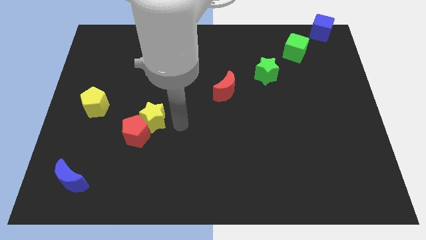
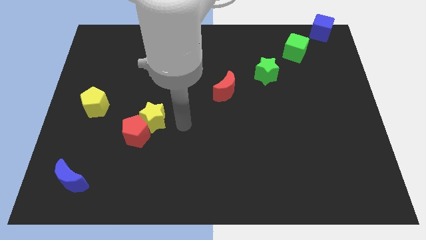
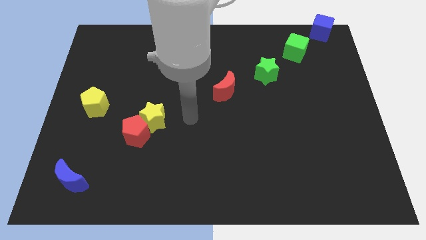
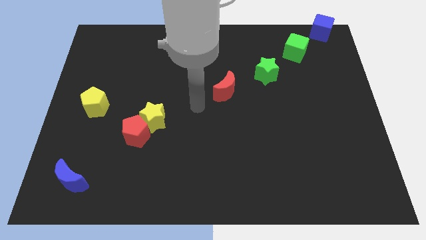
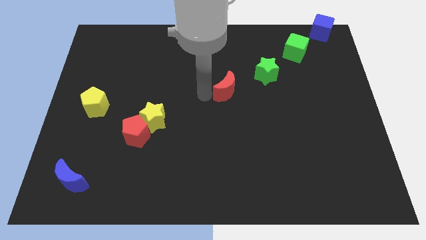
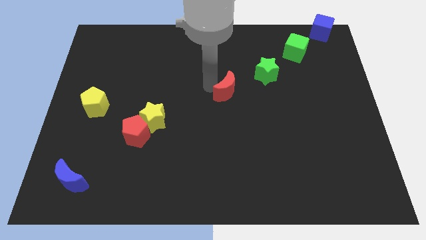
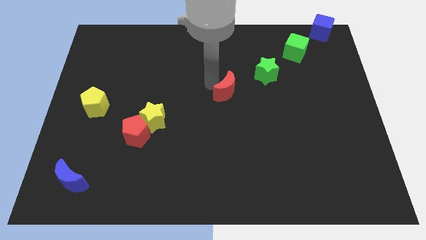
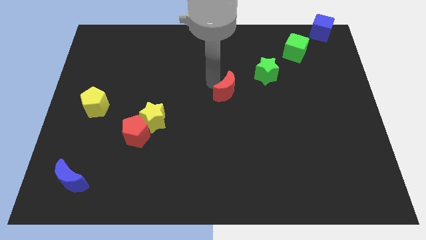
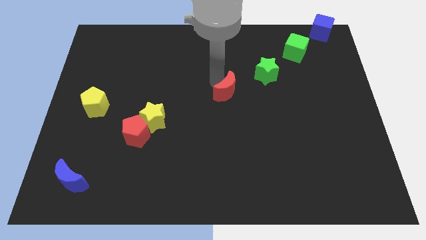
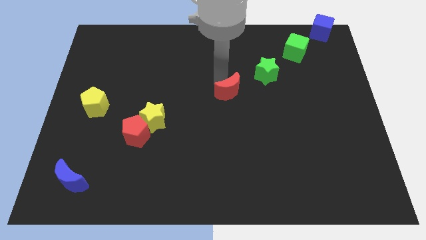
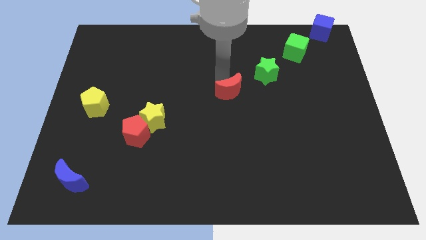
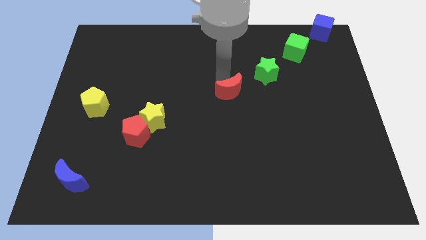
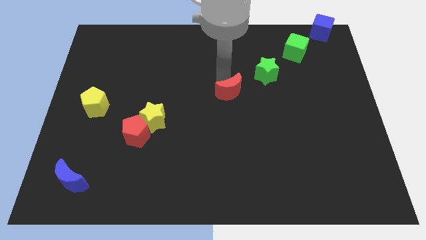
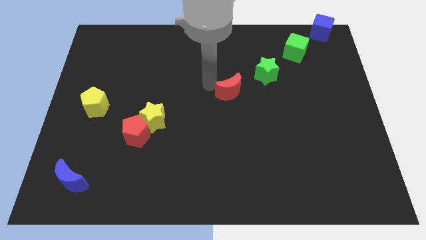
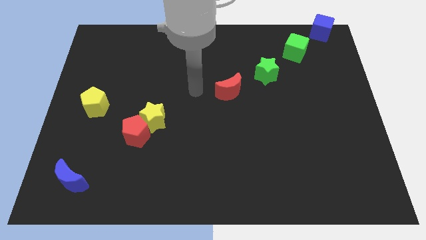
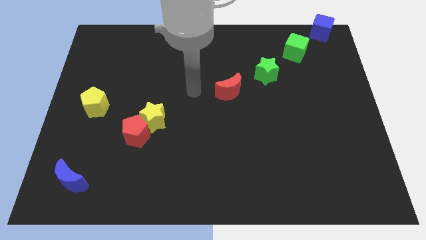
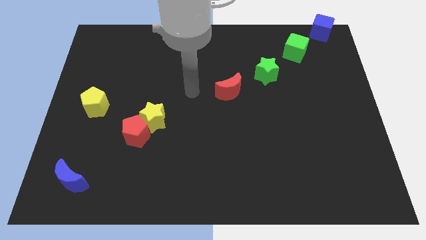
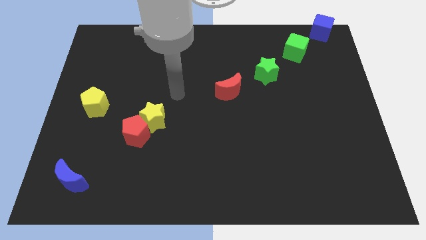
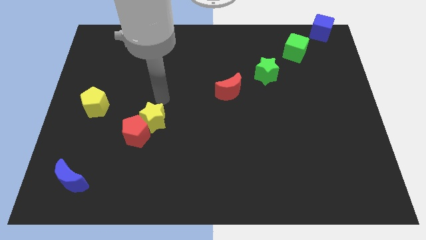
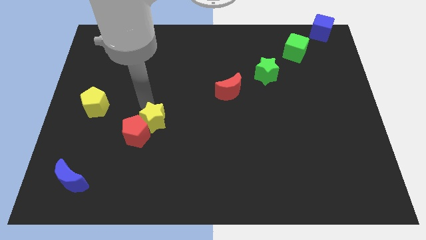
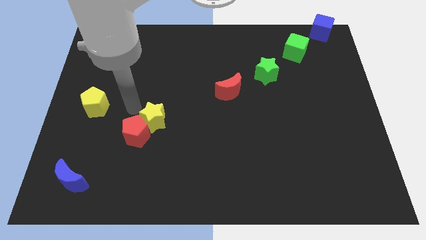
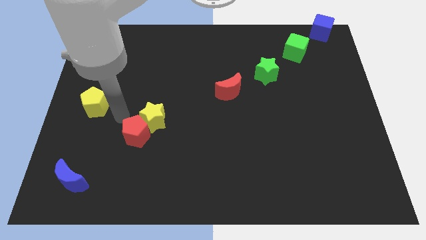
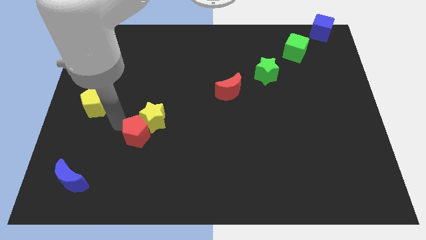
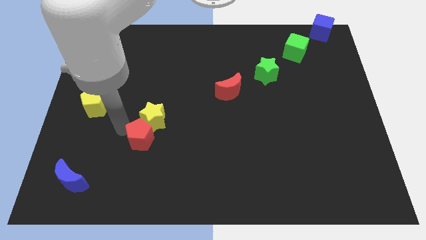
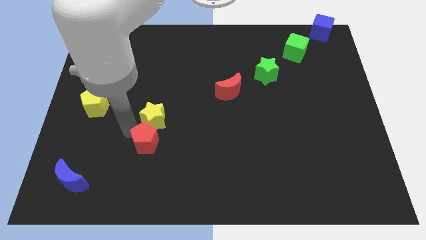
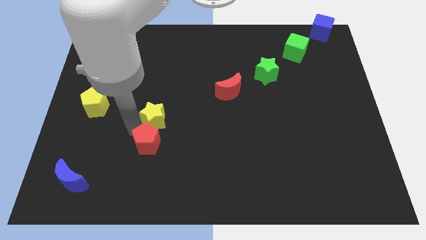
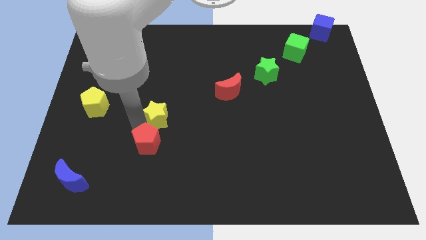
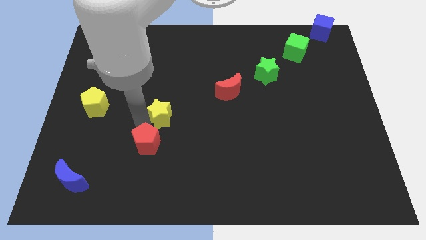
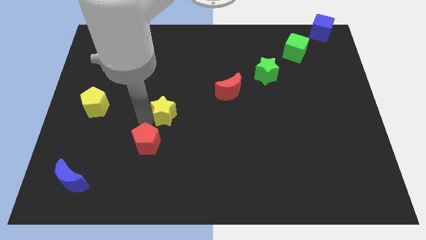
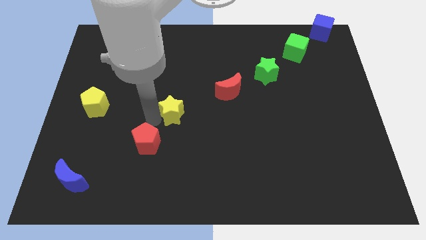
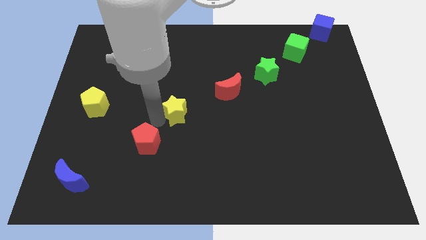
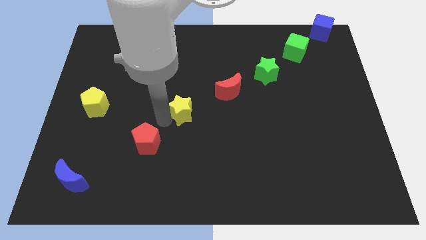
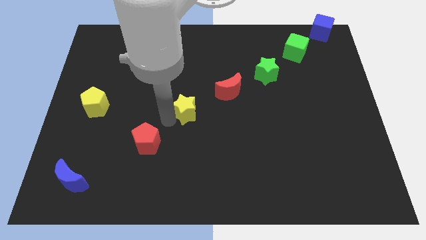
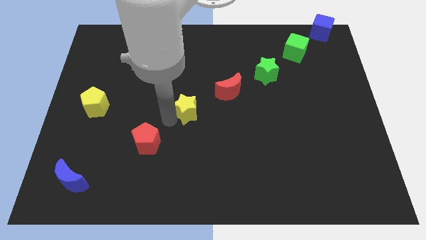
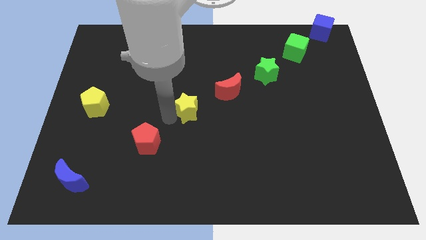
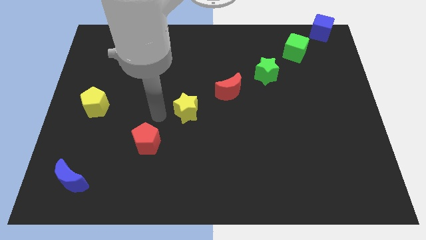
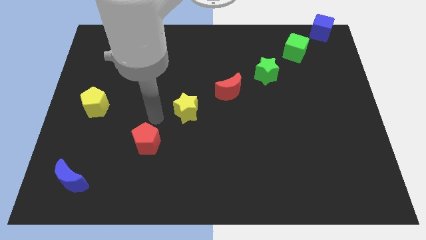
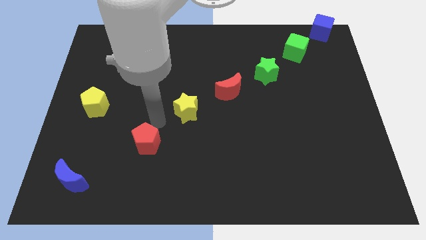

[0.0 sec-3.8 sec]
adjust the red blocks and yellow star diagonally to form a line

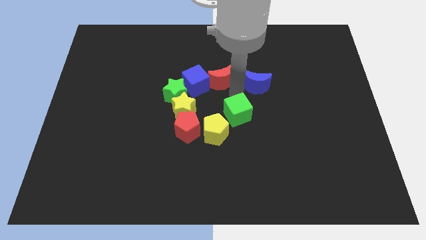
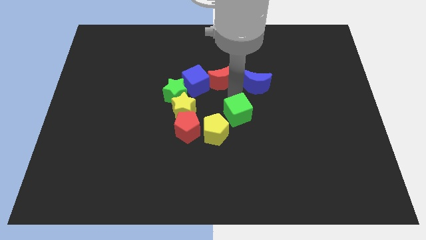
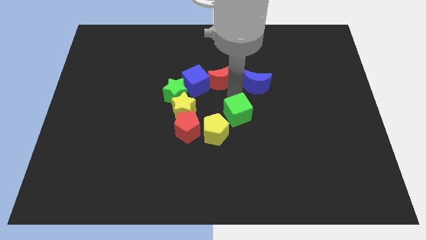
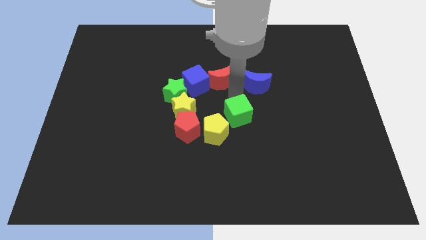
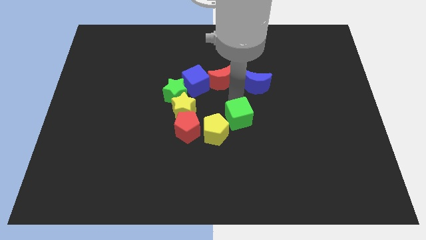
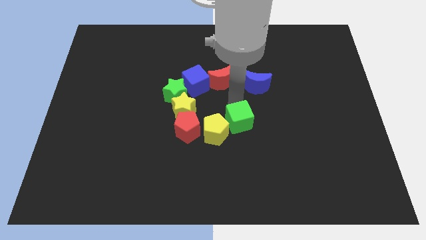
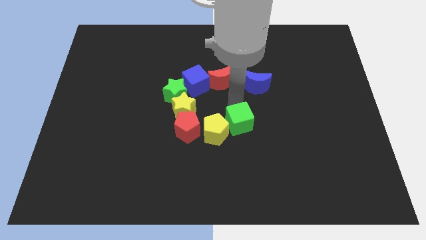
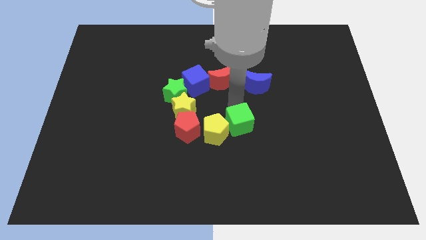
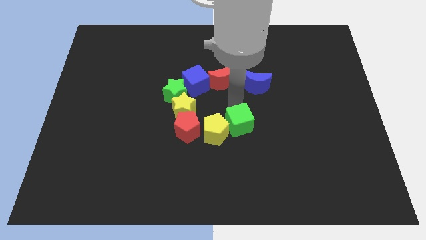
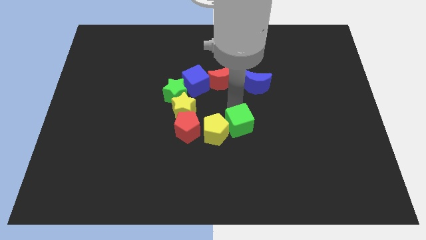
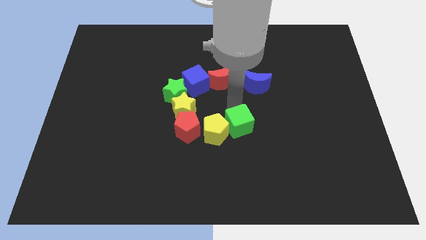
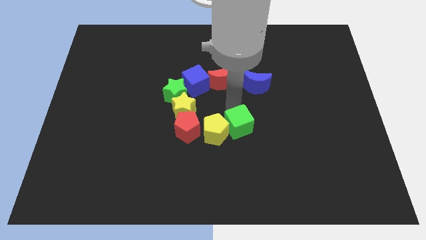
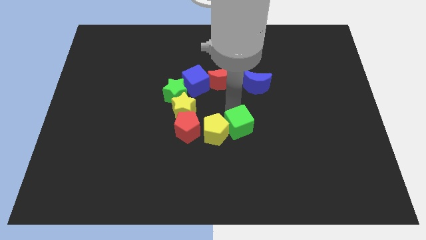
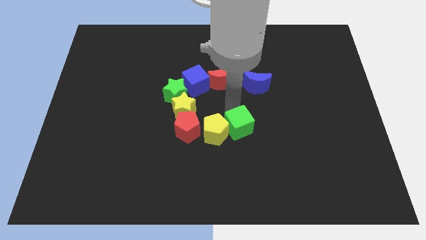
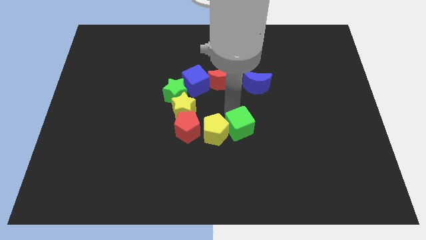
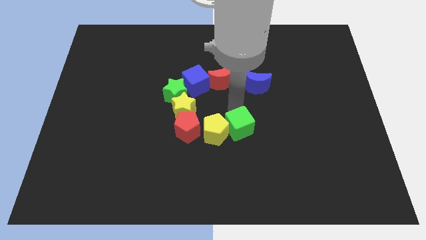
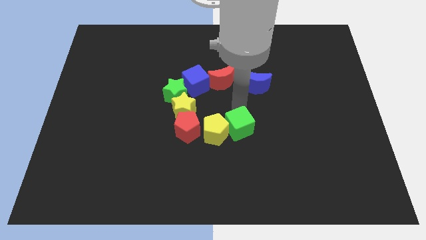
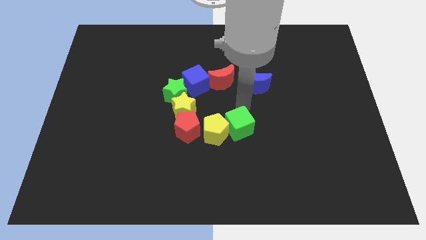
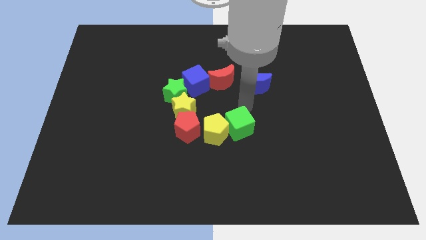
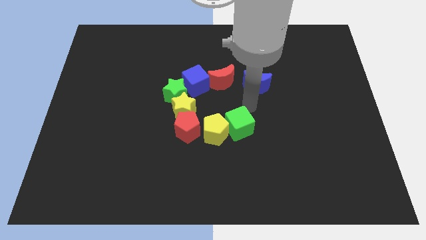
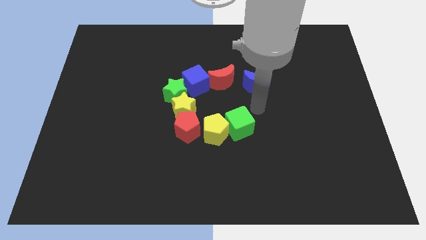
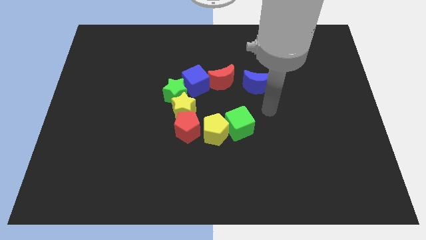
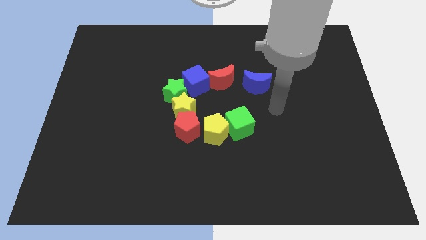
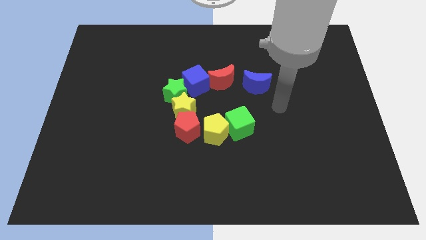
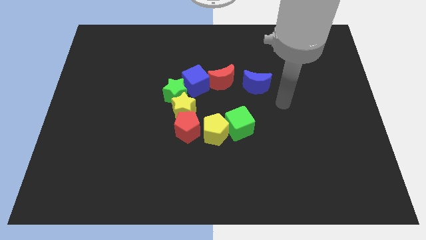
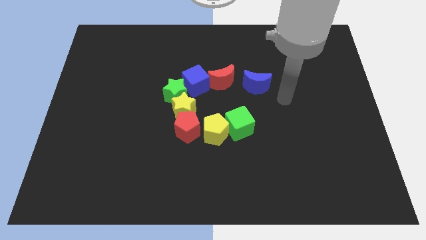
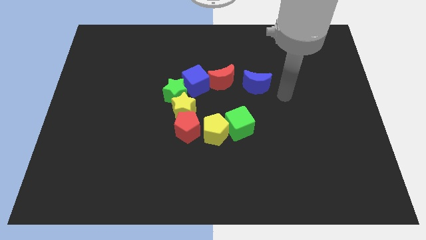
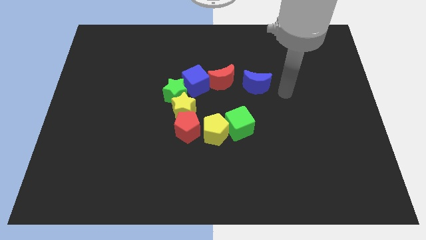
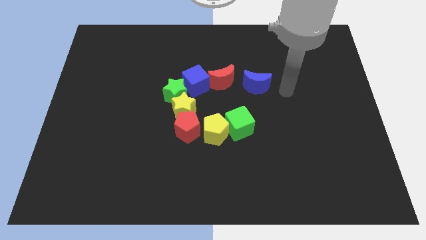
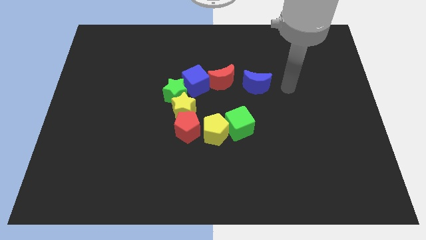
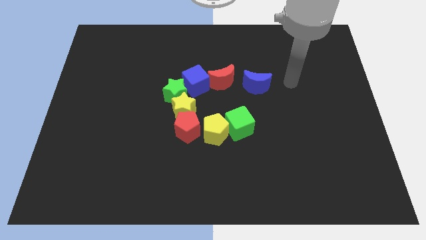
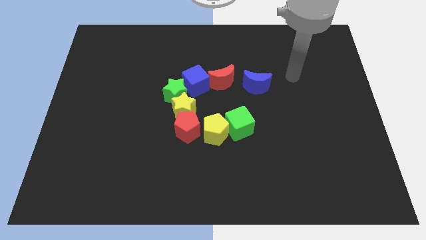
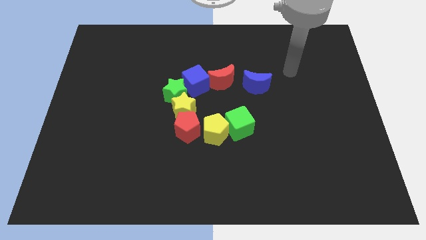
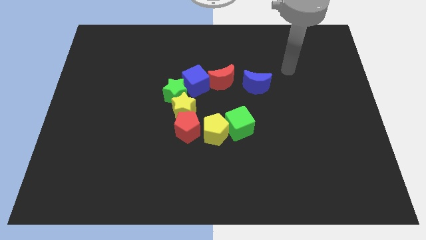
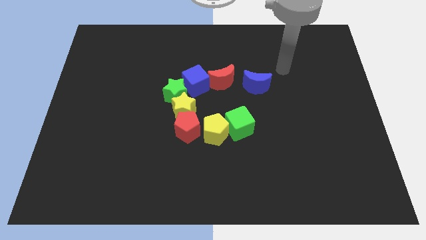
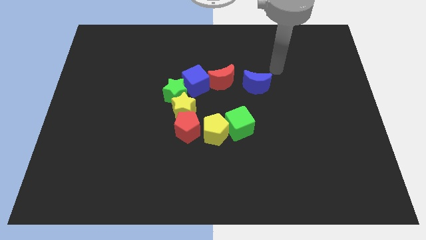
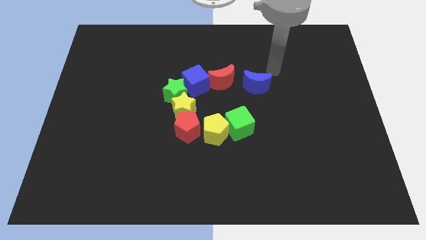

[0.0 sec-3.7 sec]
move green cube right beside the yellow pentagon

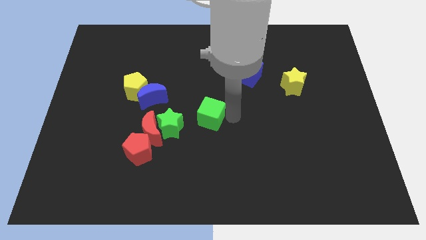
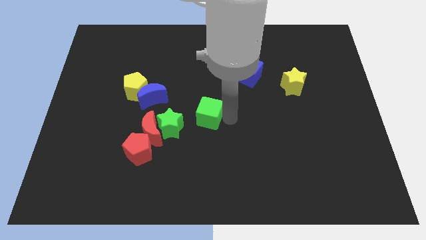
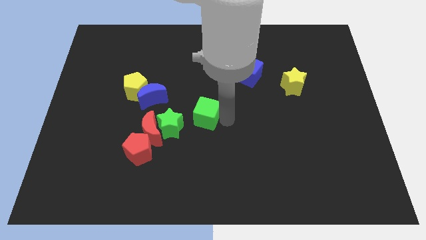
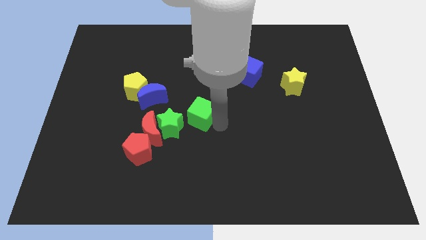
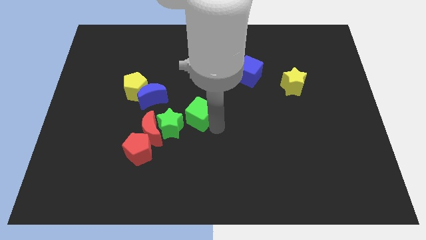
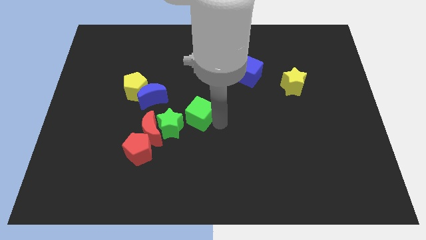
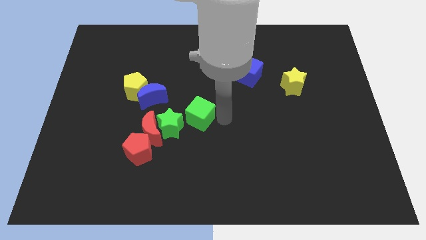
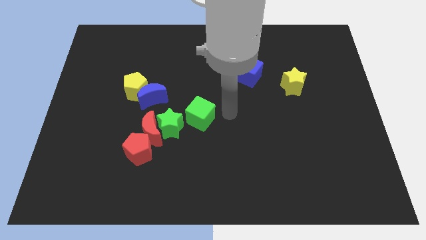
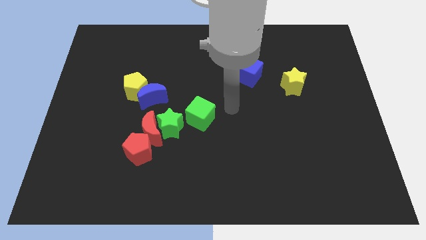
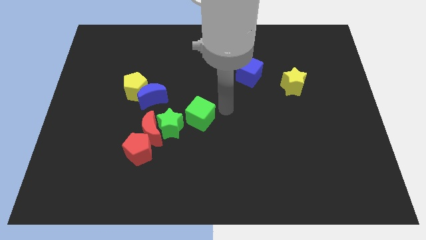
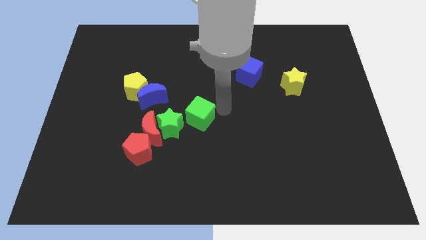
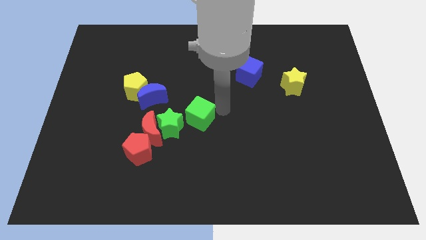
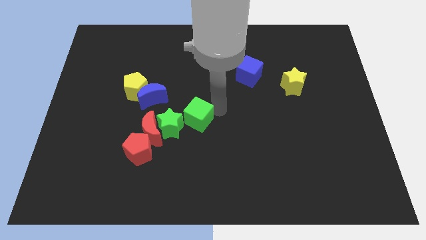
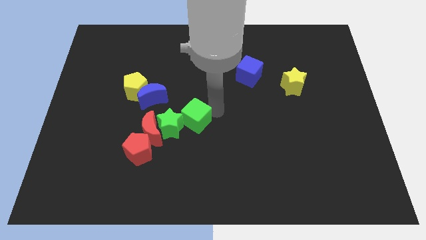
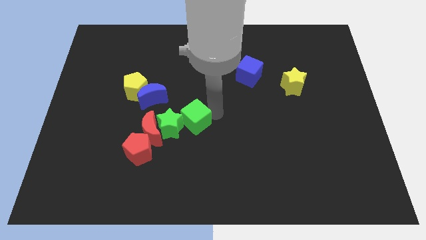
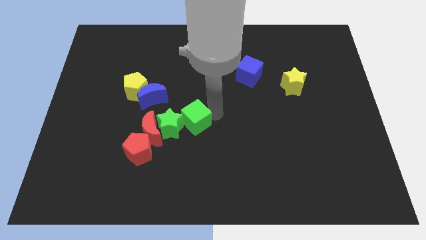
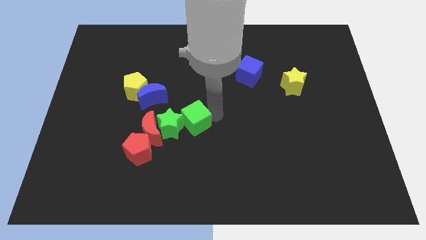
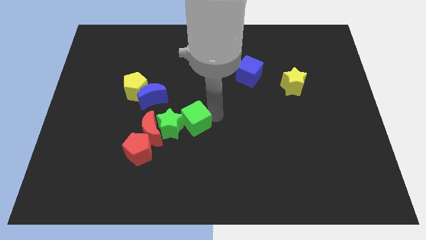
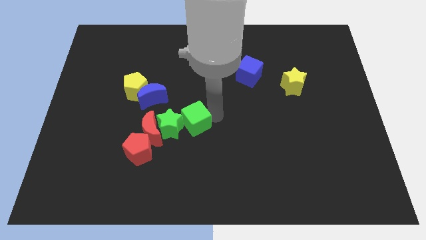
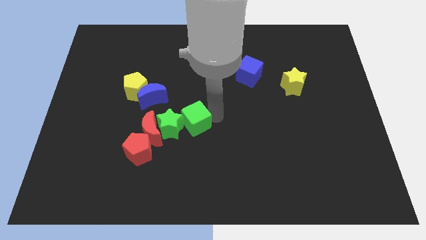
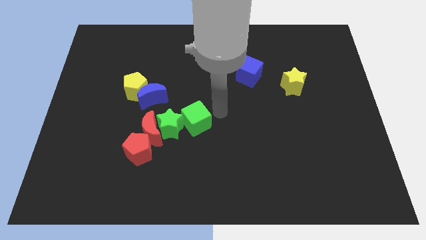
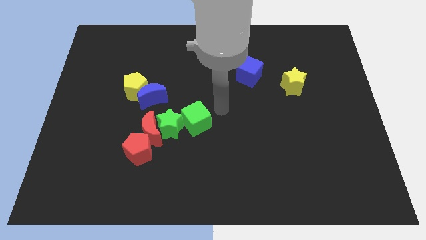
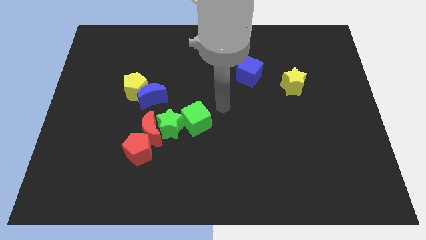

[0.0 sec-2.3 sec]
move the green cube to the right of the green star
